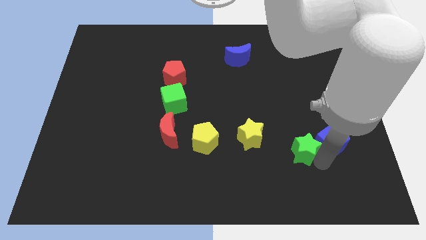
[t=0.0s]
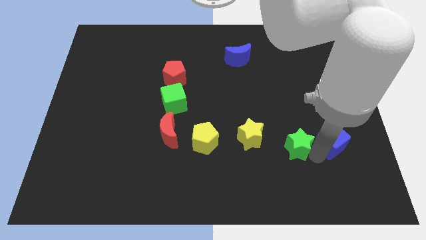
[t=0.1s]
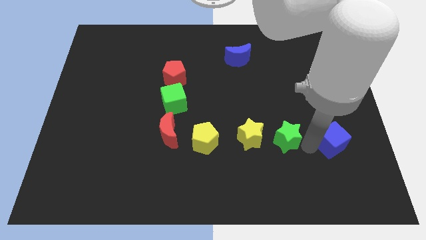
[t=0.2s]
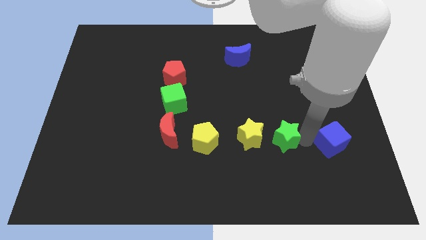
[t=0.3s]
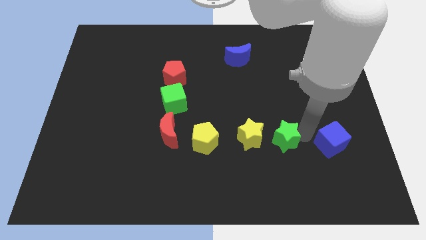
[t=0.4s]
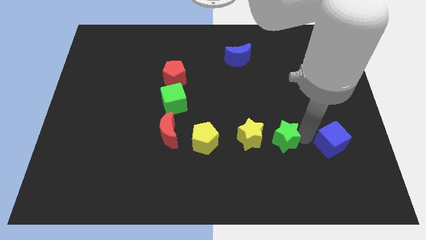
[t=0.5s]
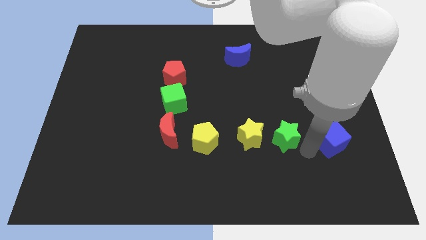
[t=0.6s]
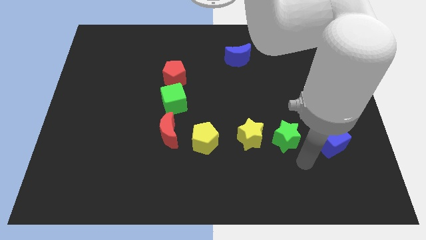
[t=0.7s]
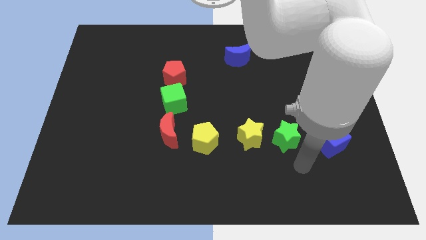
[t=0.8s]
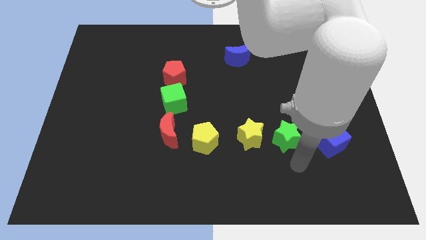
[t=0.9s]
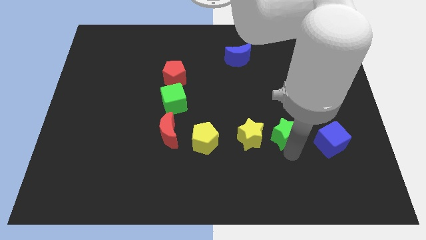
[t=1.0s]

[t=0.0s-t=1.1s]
slide green star to the right of yellow star

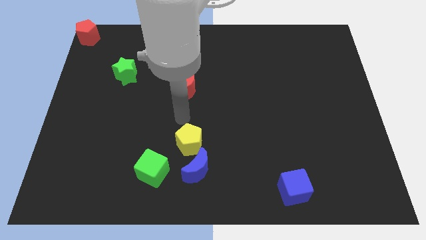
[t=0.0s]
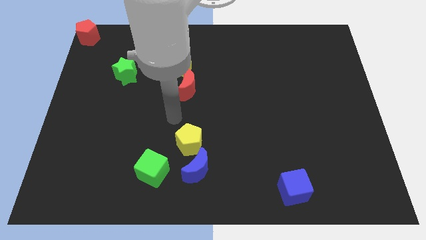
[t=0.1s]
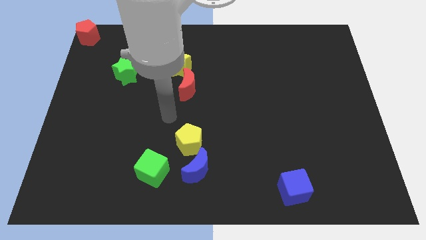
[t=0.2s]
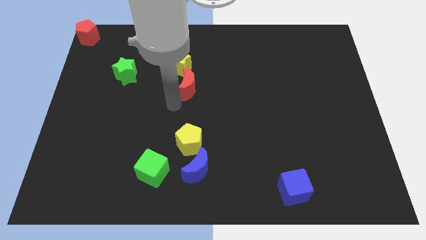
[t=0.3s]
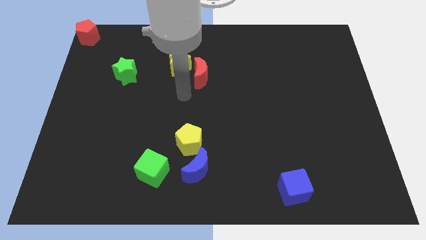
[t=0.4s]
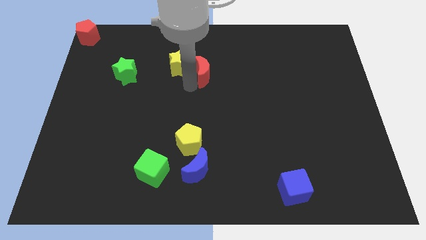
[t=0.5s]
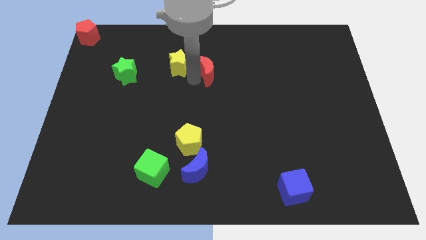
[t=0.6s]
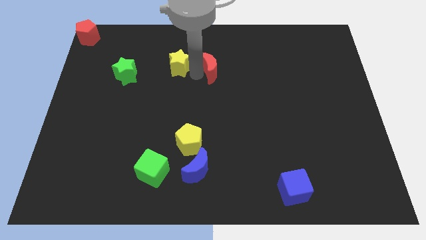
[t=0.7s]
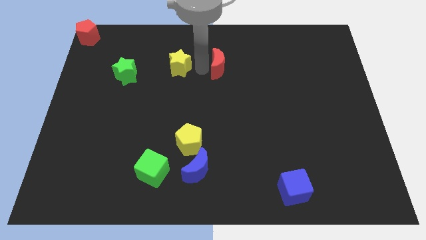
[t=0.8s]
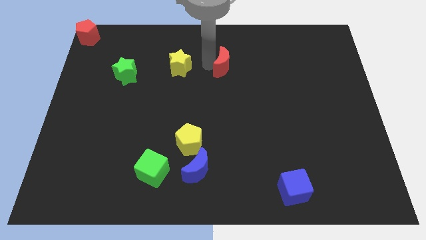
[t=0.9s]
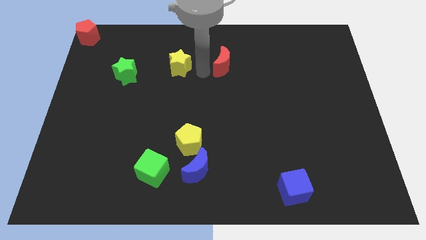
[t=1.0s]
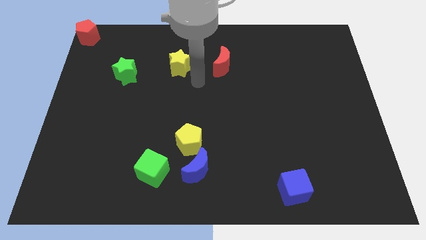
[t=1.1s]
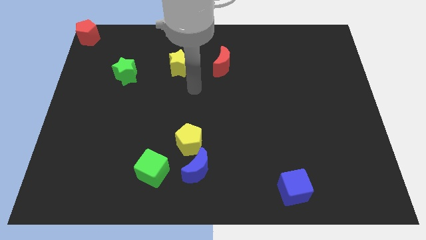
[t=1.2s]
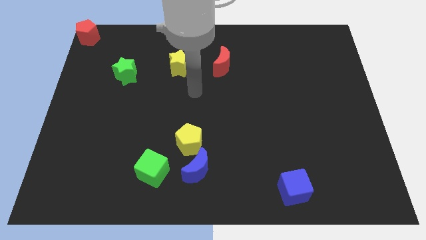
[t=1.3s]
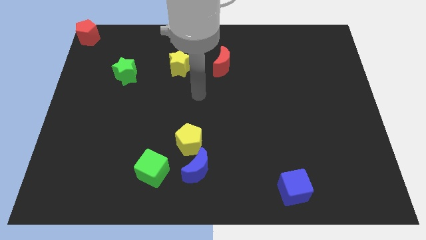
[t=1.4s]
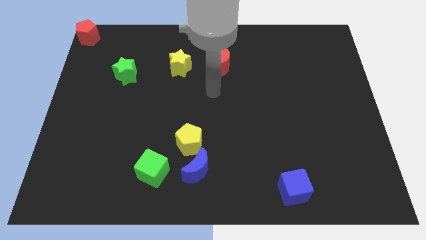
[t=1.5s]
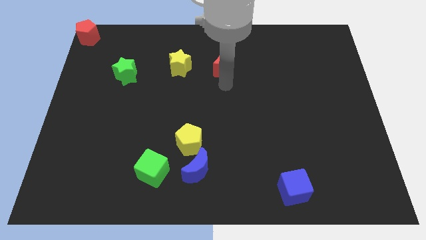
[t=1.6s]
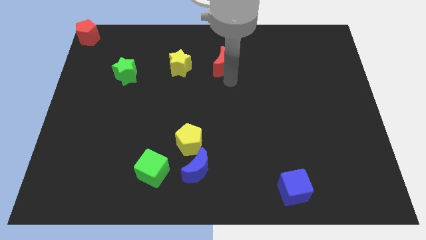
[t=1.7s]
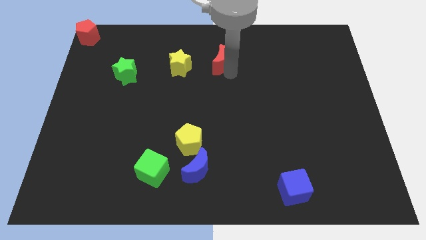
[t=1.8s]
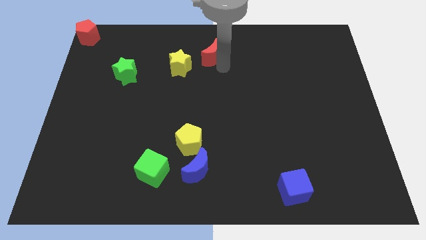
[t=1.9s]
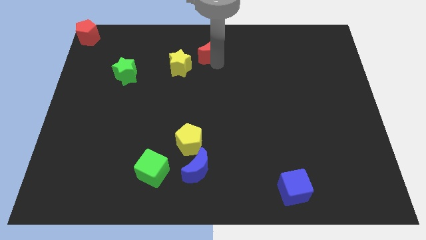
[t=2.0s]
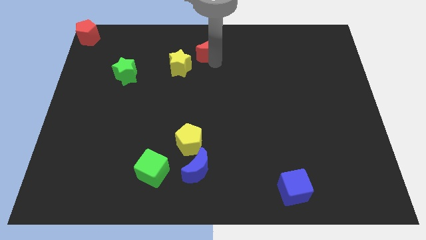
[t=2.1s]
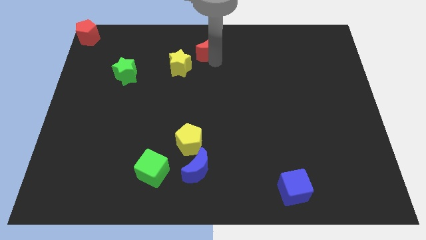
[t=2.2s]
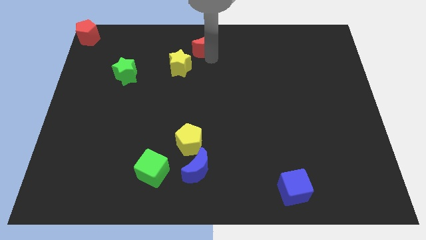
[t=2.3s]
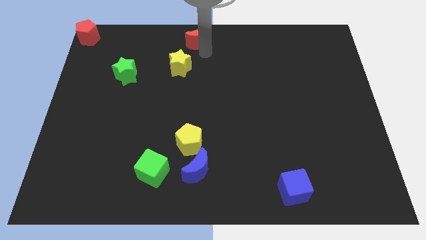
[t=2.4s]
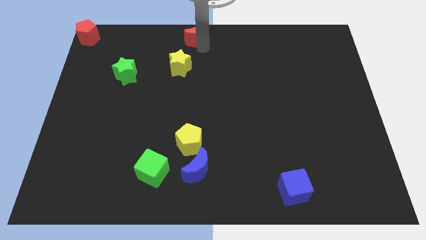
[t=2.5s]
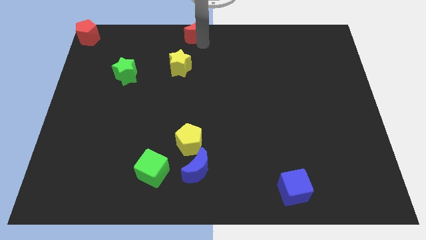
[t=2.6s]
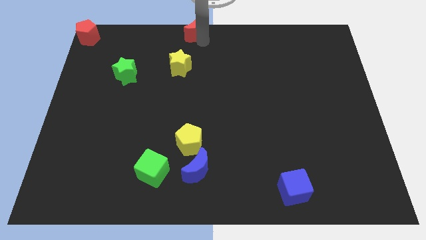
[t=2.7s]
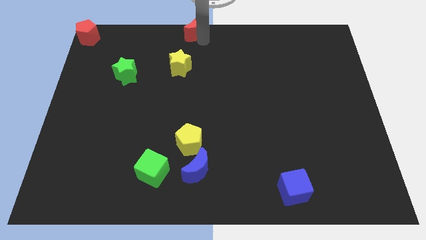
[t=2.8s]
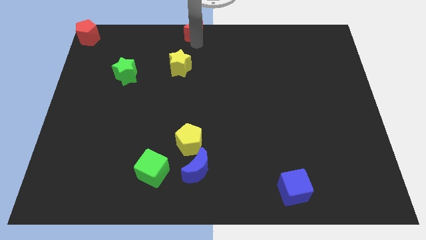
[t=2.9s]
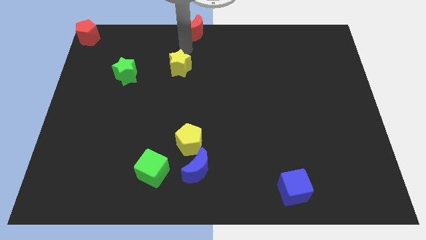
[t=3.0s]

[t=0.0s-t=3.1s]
move red crescent at center top

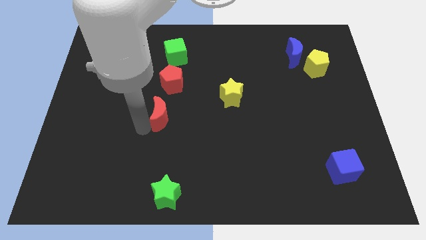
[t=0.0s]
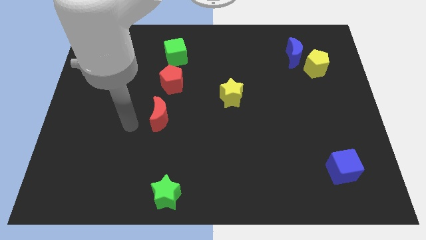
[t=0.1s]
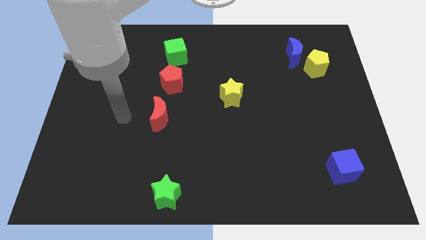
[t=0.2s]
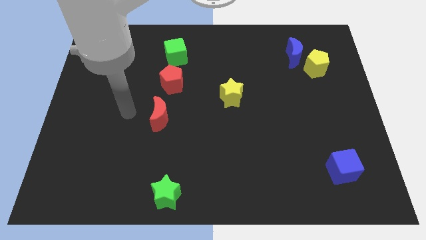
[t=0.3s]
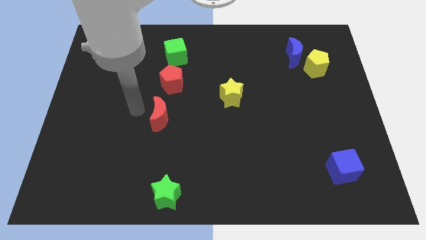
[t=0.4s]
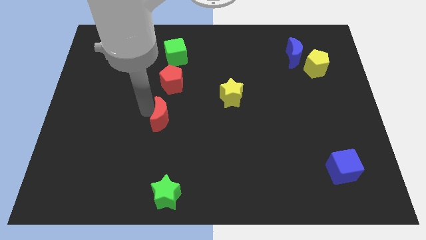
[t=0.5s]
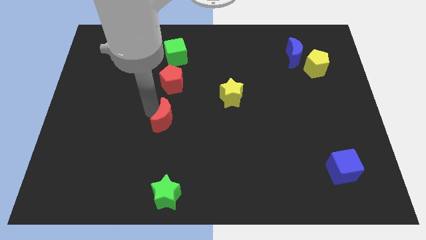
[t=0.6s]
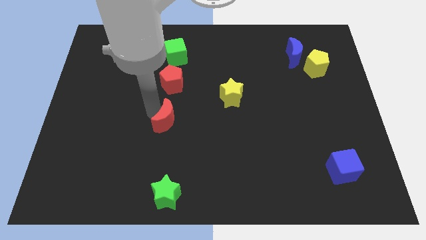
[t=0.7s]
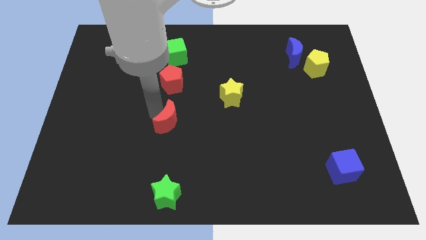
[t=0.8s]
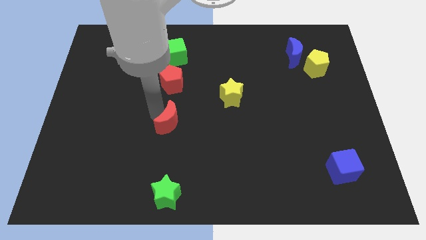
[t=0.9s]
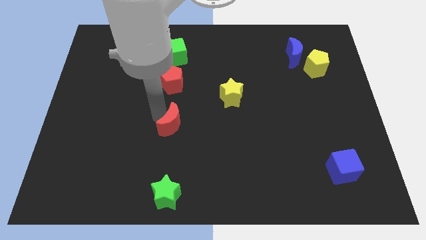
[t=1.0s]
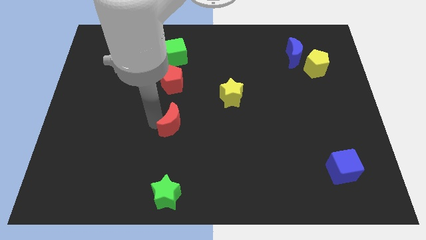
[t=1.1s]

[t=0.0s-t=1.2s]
place the red crescent below the red pentagon

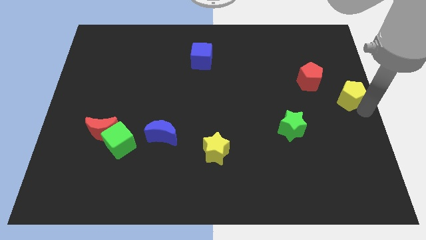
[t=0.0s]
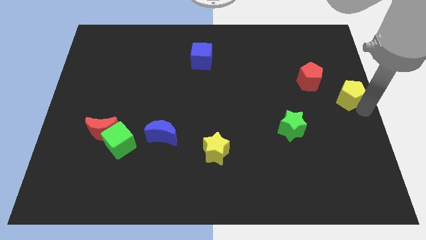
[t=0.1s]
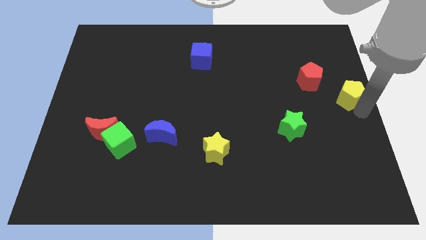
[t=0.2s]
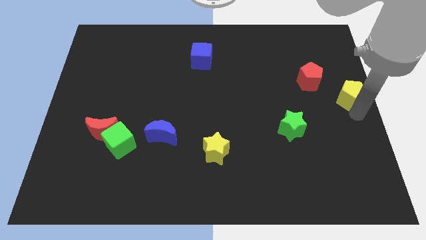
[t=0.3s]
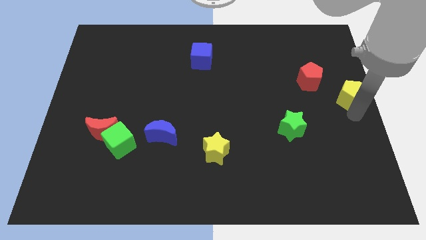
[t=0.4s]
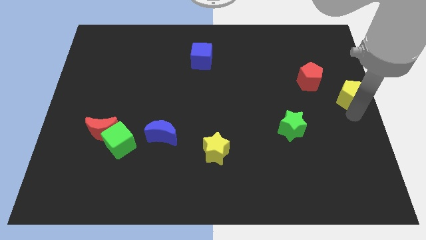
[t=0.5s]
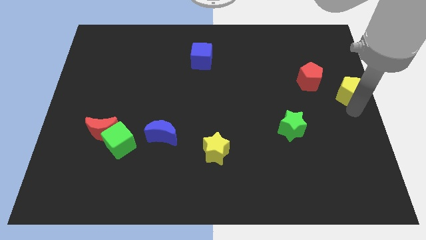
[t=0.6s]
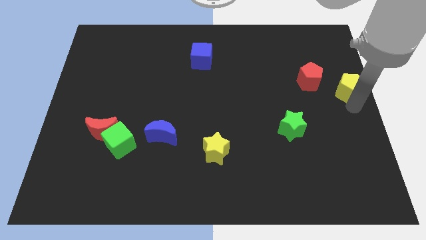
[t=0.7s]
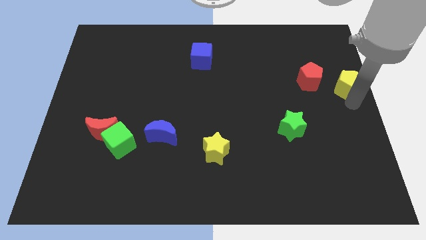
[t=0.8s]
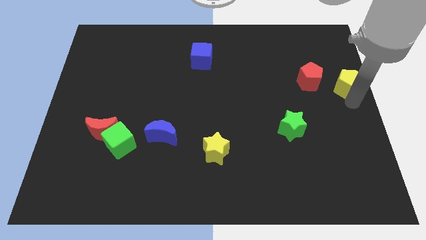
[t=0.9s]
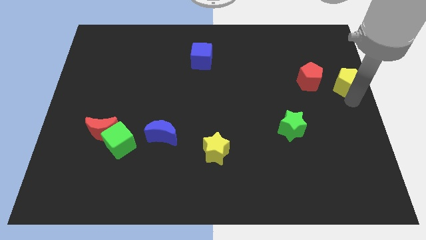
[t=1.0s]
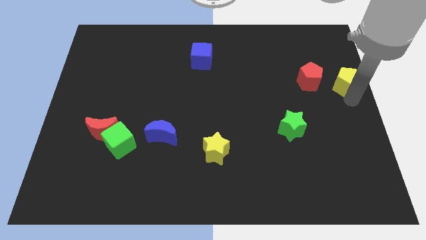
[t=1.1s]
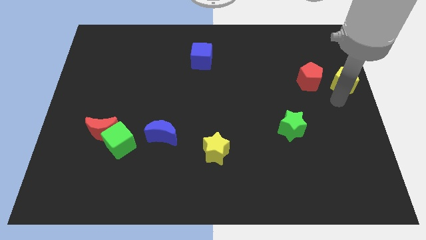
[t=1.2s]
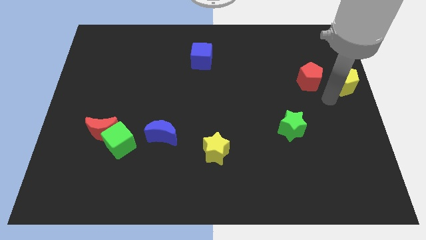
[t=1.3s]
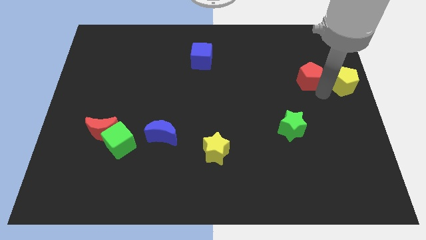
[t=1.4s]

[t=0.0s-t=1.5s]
place the yellow pentagon parallel to red pentagon

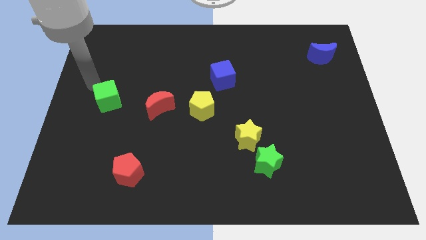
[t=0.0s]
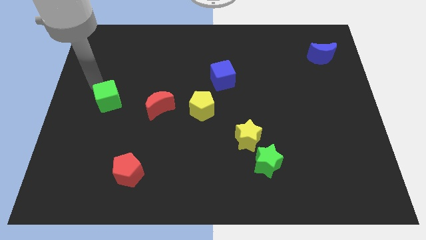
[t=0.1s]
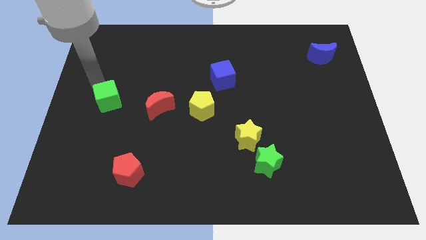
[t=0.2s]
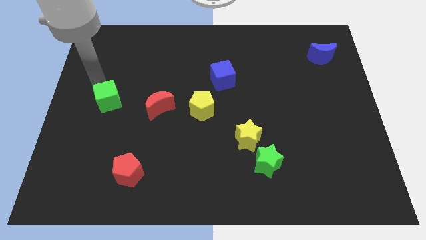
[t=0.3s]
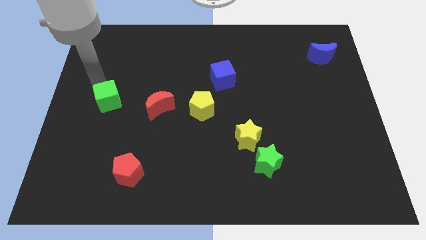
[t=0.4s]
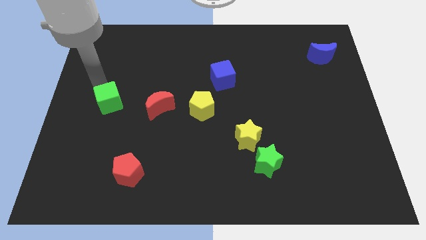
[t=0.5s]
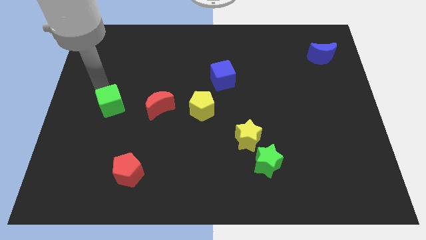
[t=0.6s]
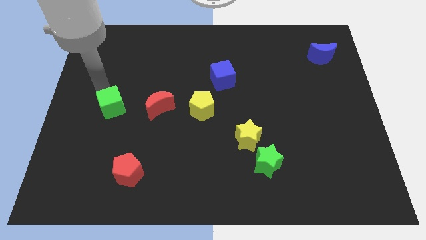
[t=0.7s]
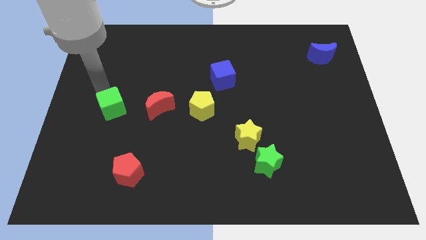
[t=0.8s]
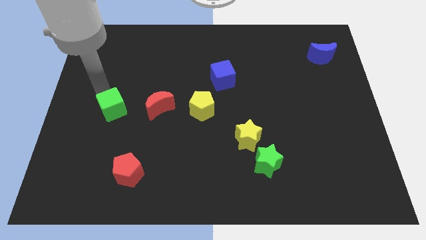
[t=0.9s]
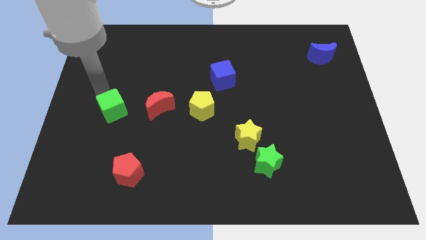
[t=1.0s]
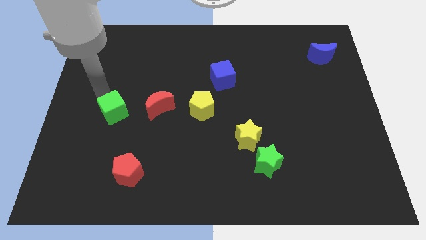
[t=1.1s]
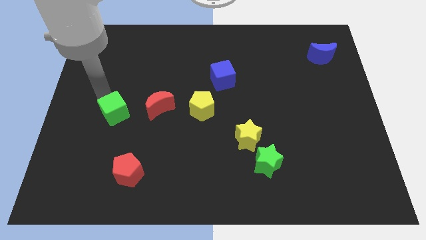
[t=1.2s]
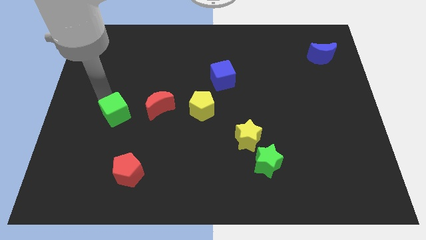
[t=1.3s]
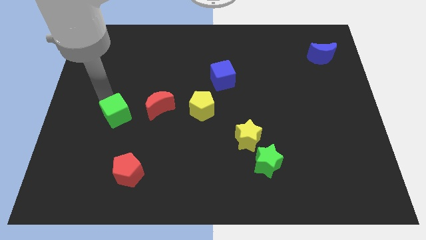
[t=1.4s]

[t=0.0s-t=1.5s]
push the green cube slightly downwards

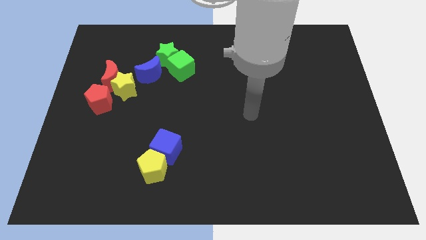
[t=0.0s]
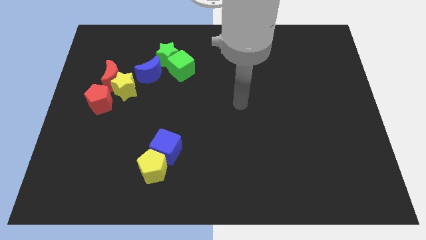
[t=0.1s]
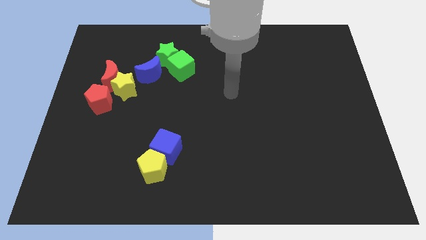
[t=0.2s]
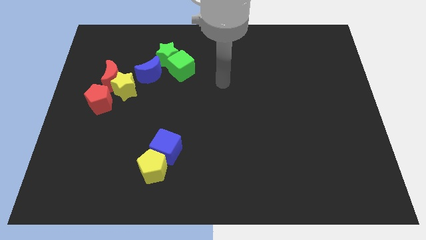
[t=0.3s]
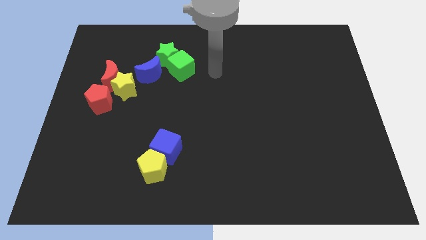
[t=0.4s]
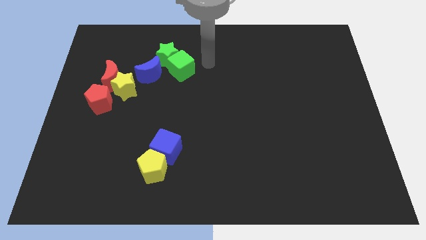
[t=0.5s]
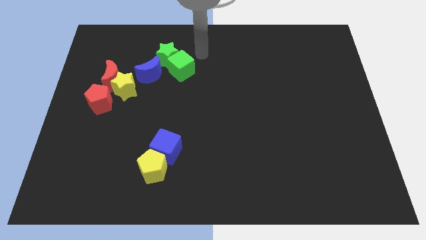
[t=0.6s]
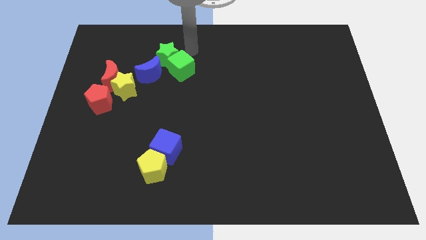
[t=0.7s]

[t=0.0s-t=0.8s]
place the arm to the right of the green cube
